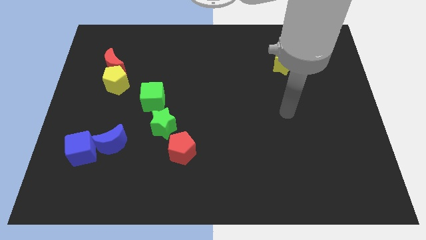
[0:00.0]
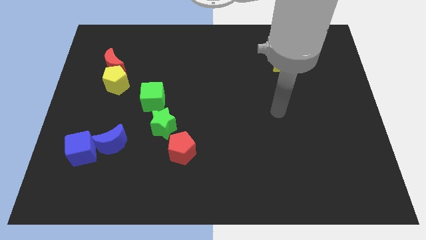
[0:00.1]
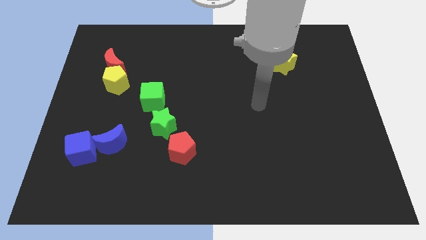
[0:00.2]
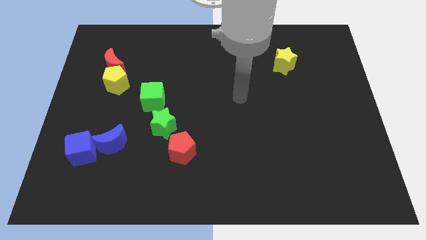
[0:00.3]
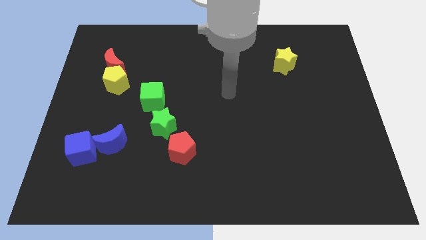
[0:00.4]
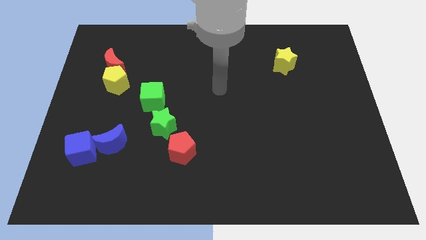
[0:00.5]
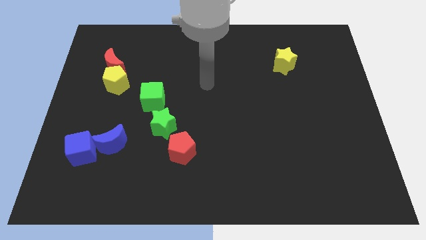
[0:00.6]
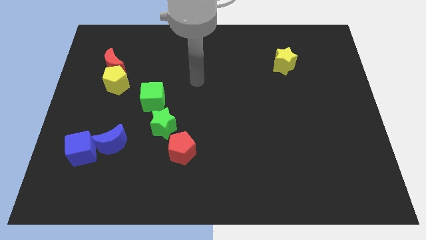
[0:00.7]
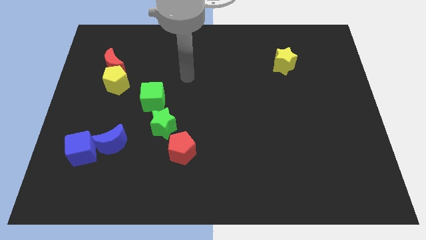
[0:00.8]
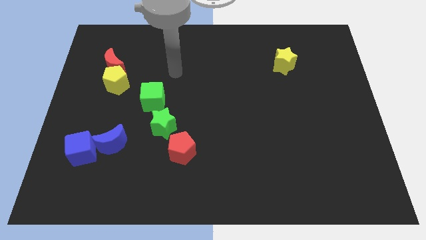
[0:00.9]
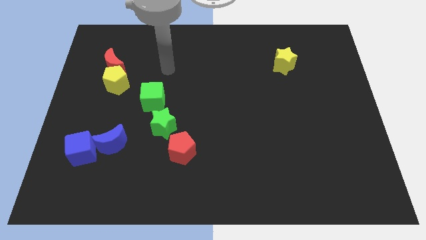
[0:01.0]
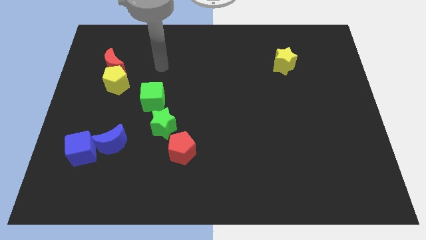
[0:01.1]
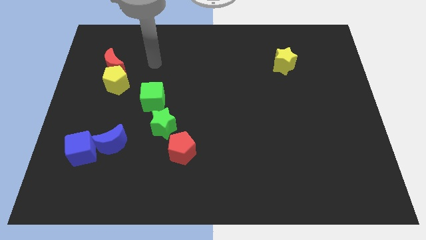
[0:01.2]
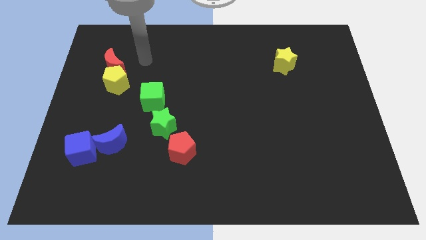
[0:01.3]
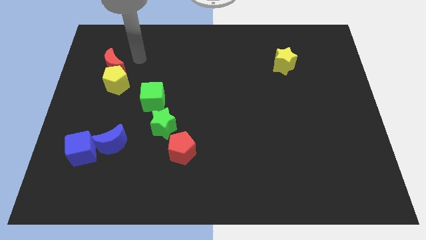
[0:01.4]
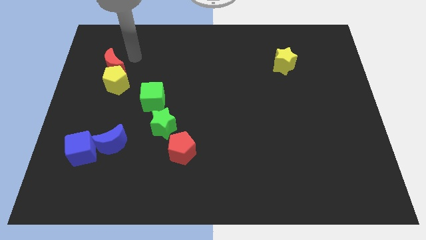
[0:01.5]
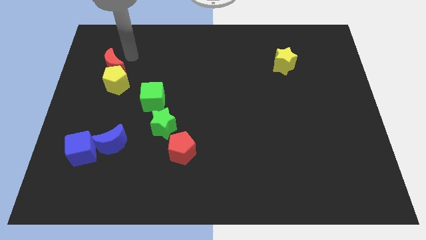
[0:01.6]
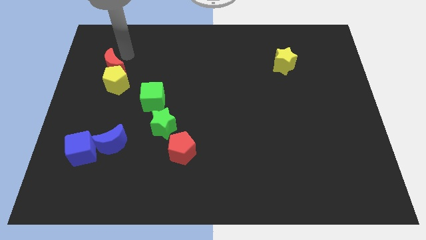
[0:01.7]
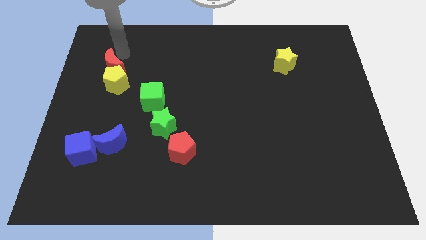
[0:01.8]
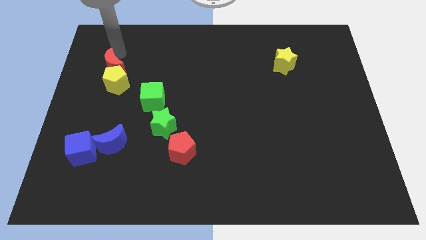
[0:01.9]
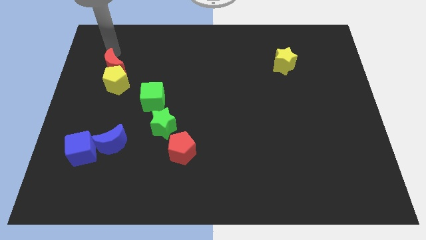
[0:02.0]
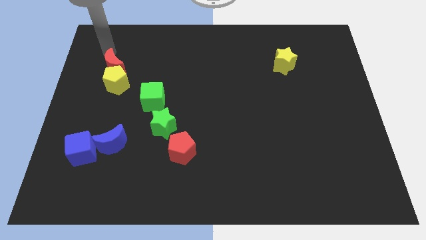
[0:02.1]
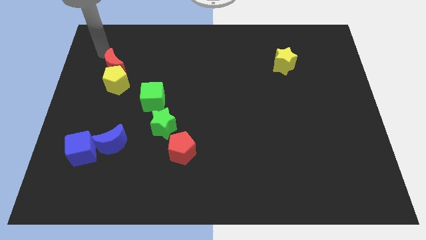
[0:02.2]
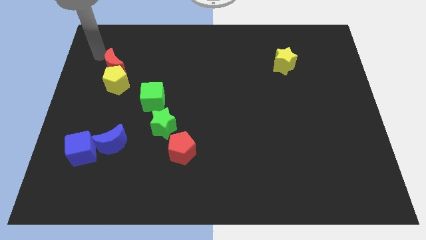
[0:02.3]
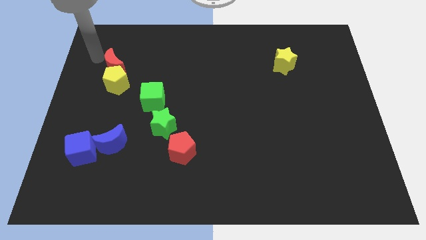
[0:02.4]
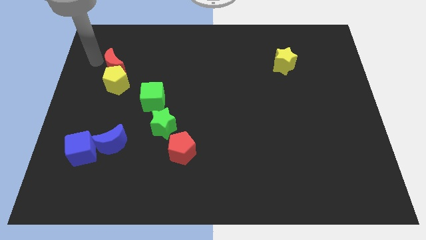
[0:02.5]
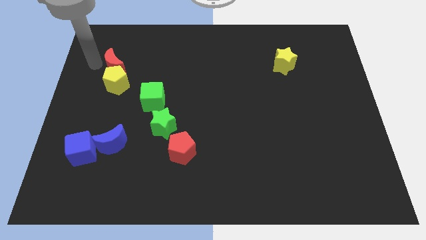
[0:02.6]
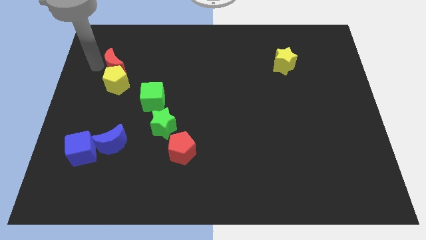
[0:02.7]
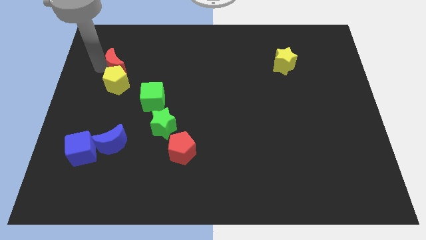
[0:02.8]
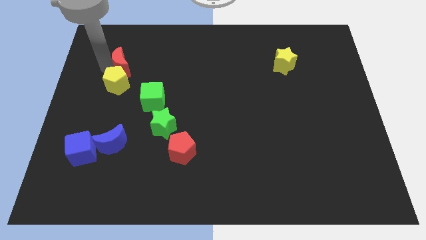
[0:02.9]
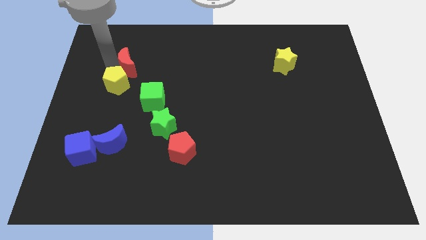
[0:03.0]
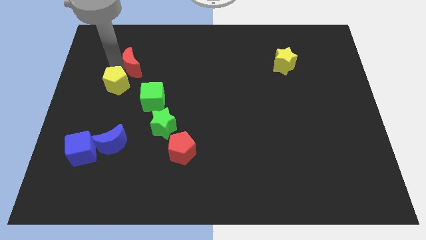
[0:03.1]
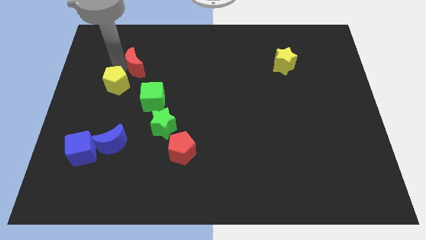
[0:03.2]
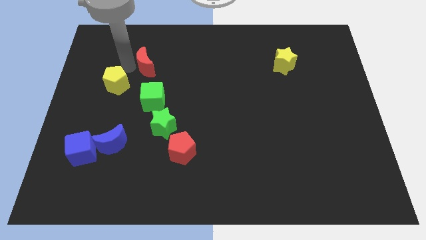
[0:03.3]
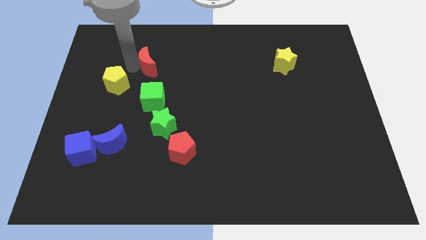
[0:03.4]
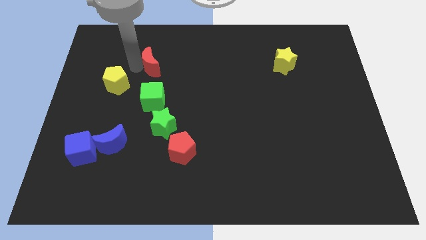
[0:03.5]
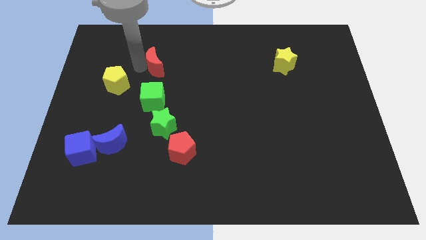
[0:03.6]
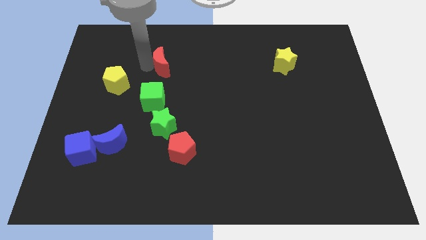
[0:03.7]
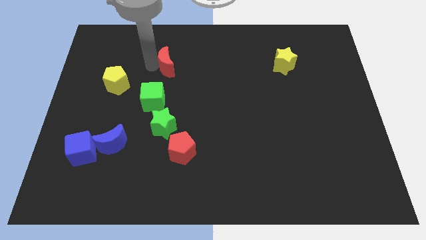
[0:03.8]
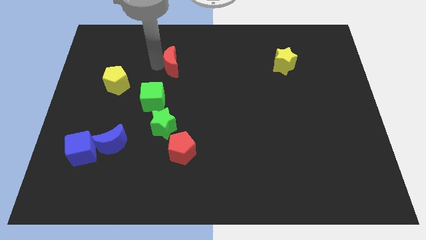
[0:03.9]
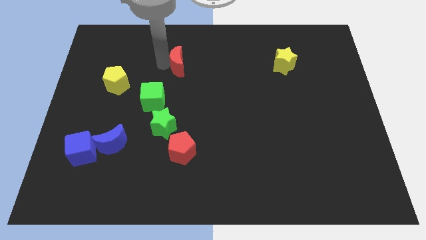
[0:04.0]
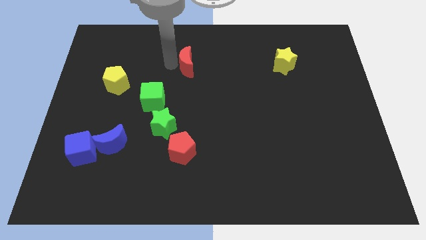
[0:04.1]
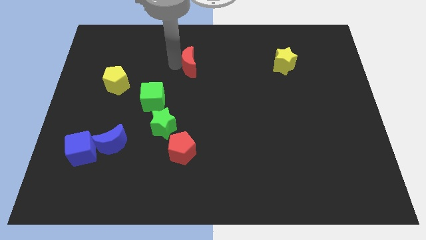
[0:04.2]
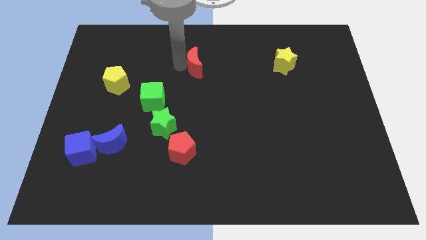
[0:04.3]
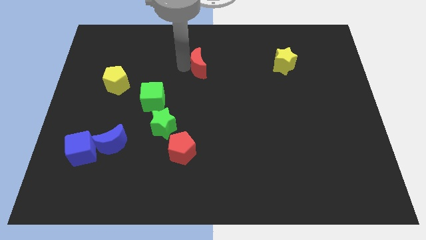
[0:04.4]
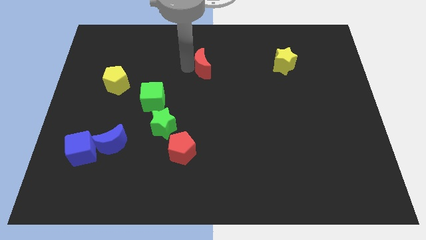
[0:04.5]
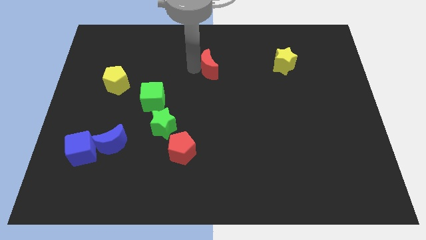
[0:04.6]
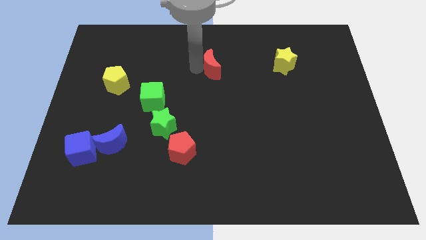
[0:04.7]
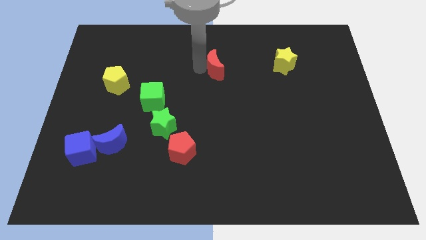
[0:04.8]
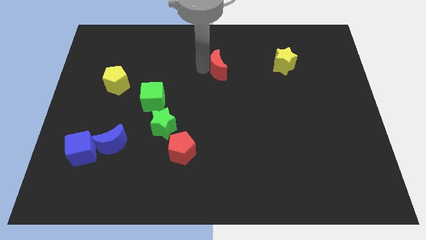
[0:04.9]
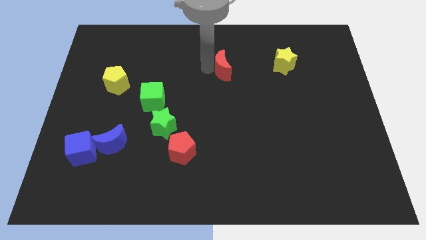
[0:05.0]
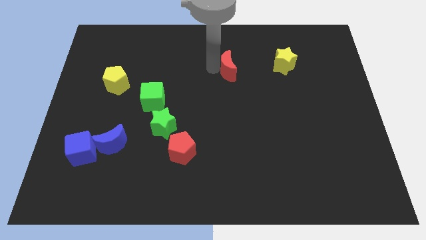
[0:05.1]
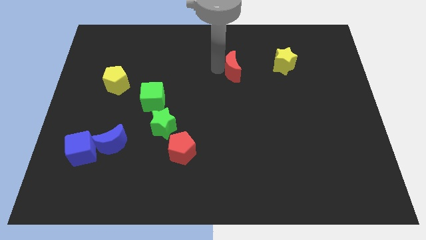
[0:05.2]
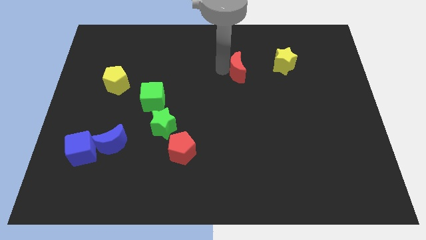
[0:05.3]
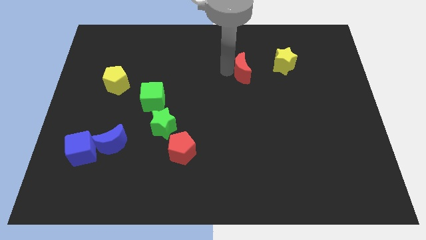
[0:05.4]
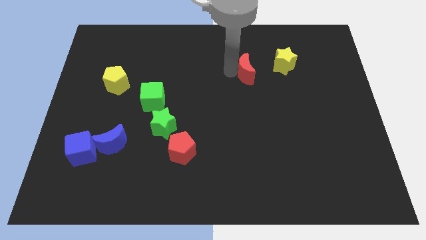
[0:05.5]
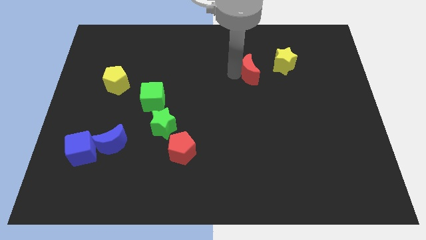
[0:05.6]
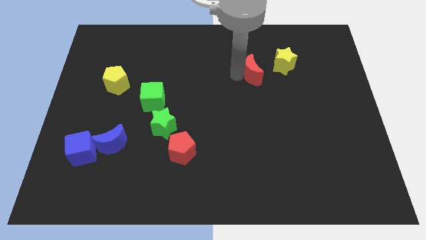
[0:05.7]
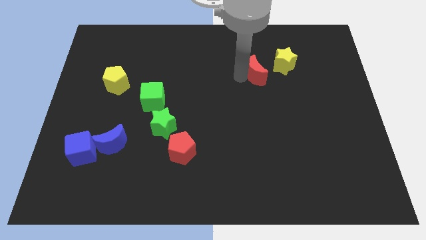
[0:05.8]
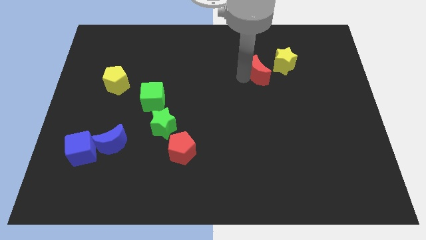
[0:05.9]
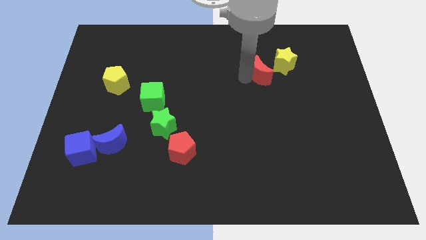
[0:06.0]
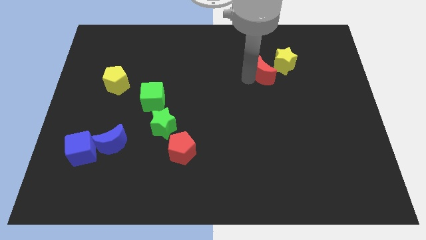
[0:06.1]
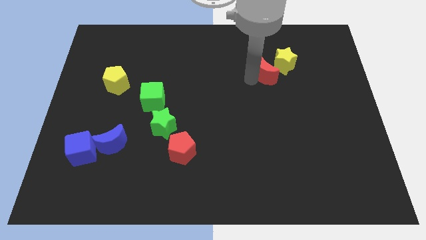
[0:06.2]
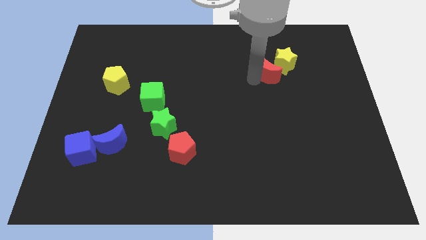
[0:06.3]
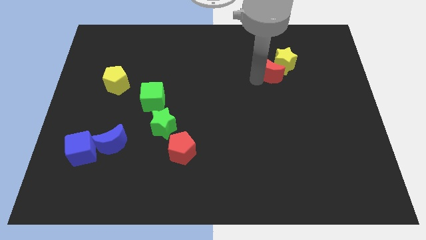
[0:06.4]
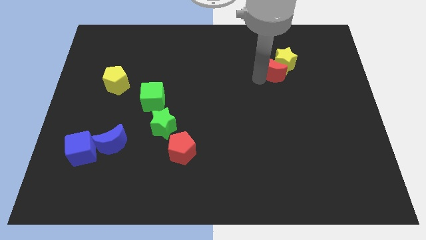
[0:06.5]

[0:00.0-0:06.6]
move the red moon towards the yellow star

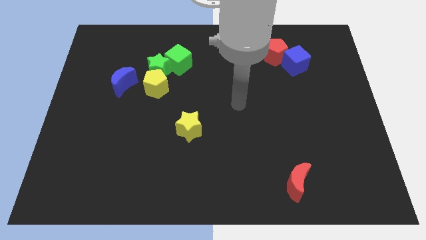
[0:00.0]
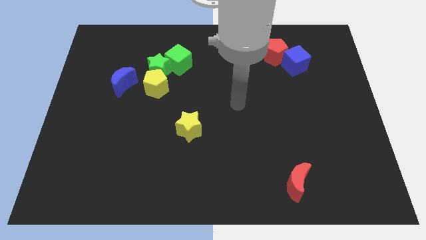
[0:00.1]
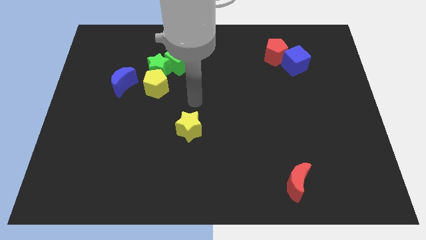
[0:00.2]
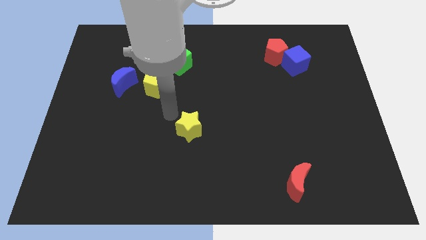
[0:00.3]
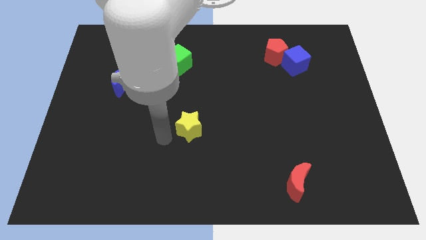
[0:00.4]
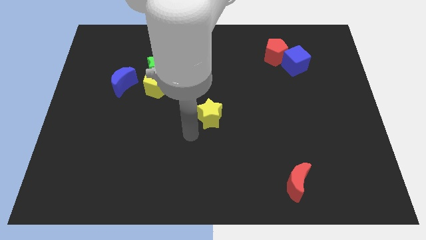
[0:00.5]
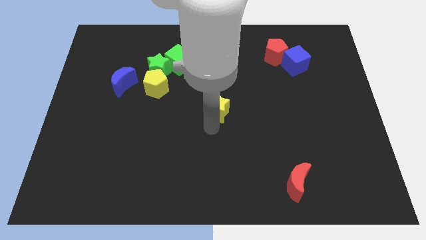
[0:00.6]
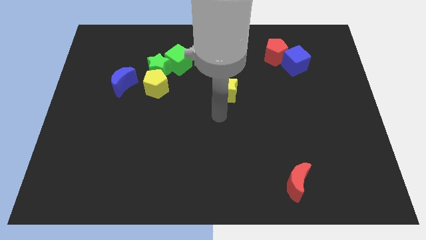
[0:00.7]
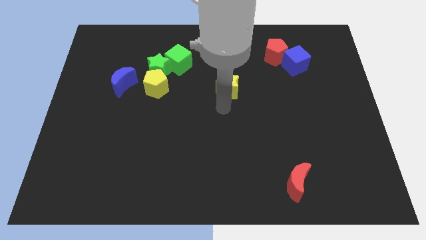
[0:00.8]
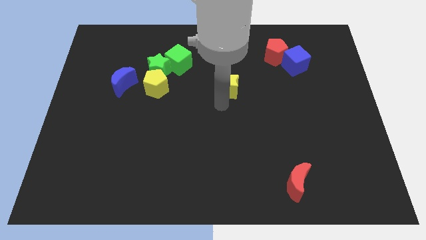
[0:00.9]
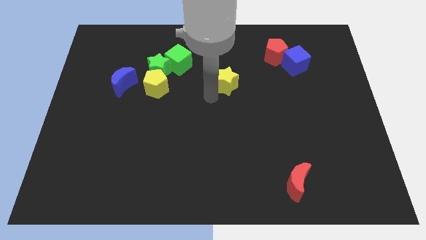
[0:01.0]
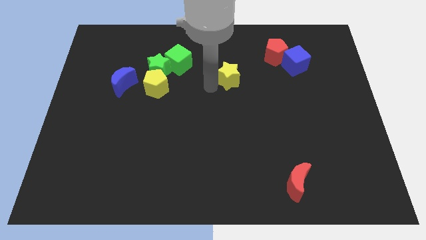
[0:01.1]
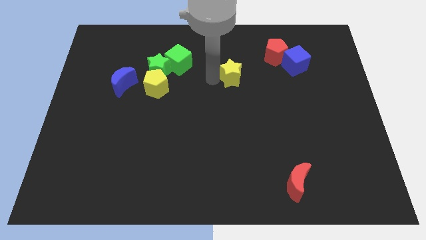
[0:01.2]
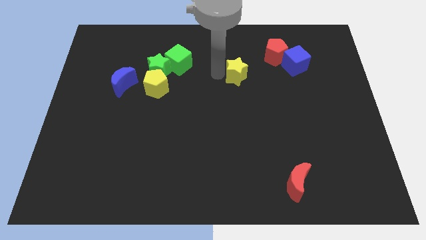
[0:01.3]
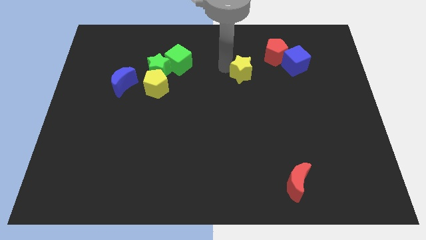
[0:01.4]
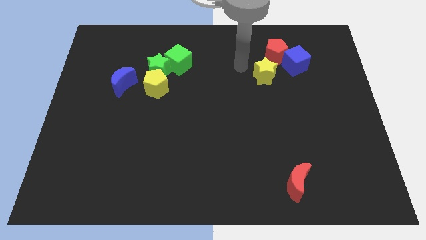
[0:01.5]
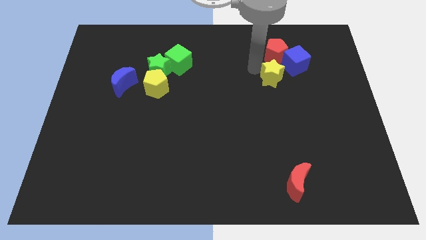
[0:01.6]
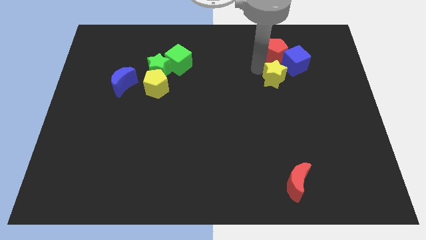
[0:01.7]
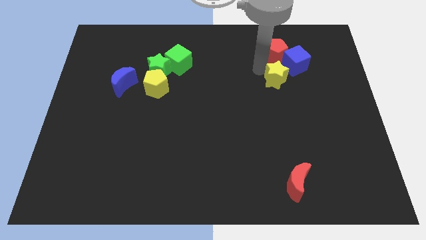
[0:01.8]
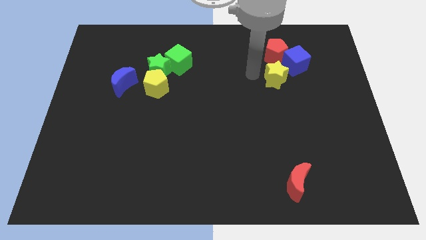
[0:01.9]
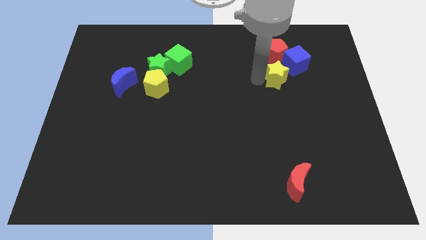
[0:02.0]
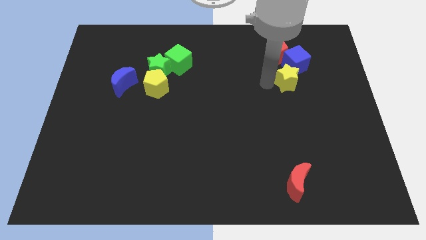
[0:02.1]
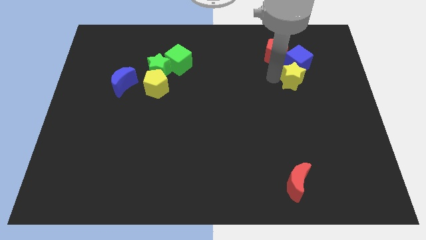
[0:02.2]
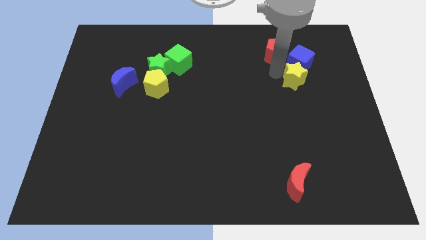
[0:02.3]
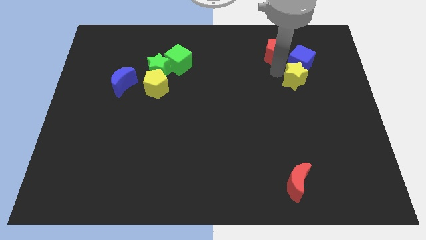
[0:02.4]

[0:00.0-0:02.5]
push the yellow star next to the blue cube
